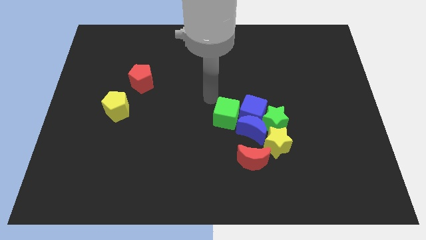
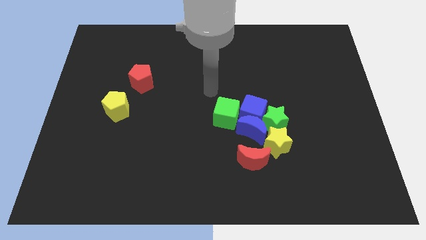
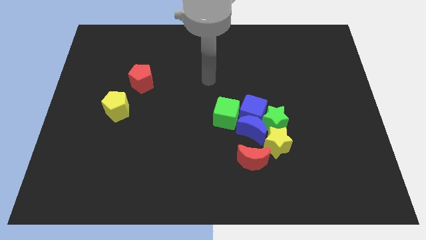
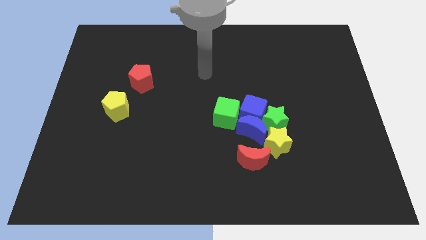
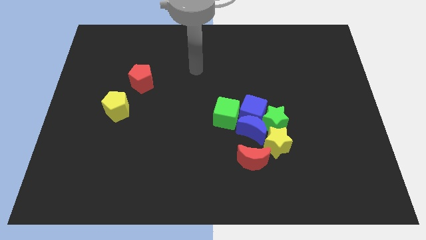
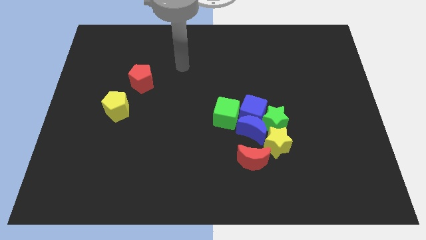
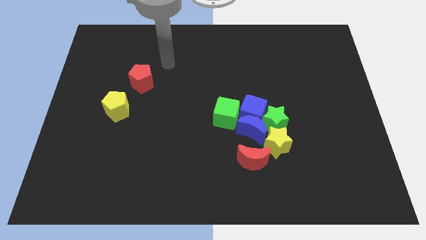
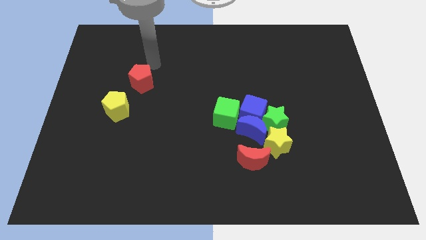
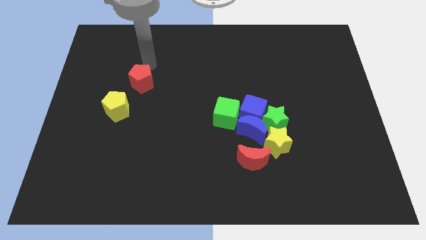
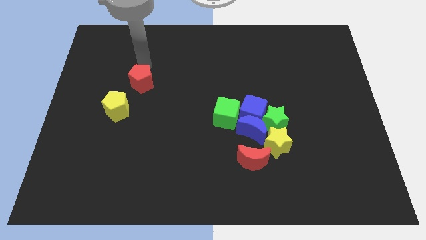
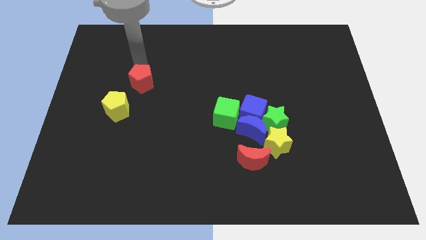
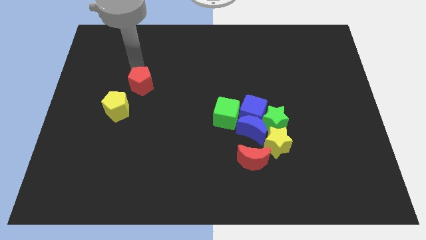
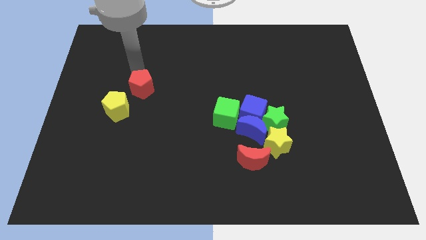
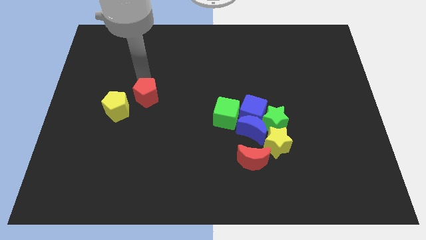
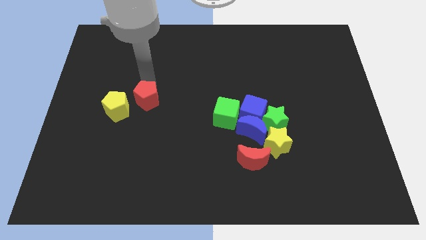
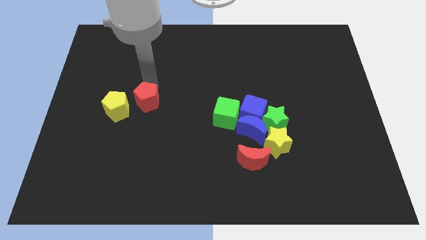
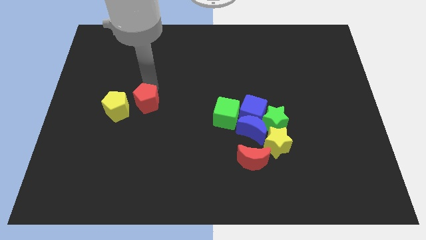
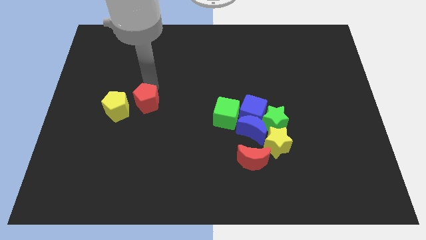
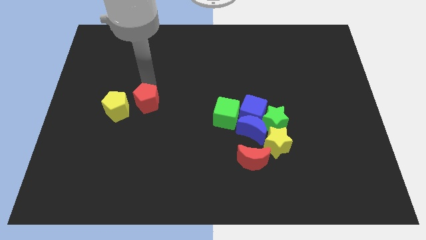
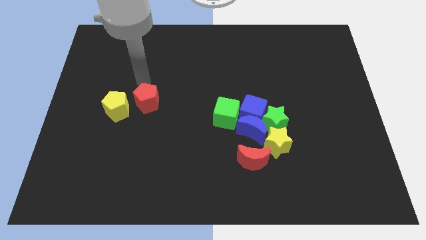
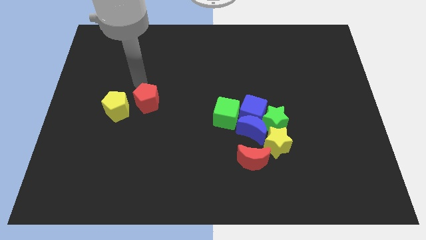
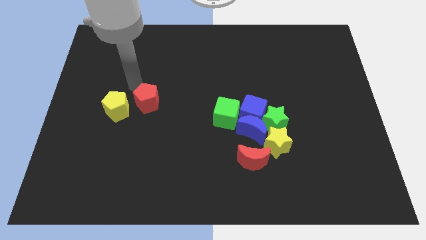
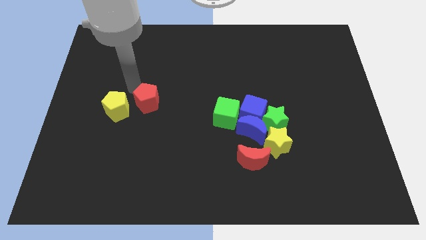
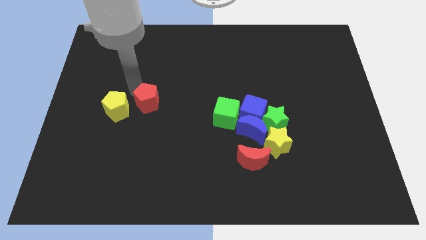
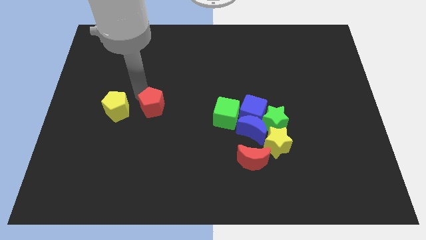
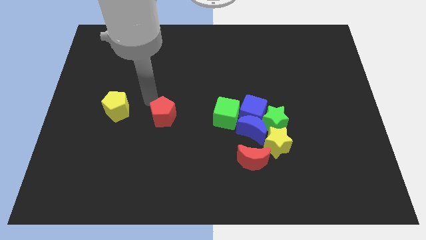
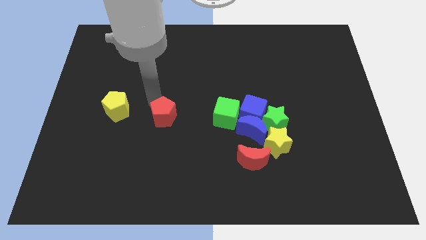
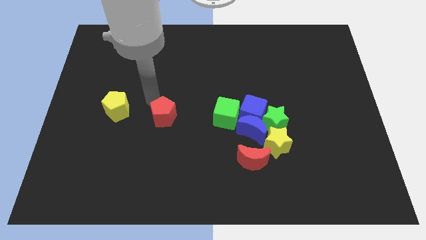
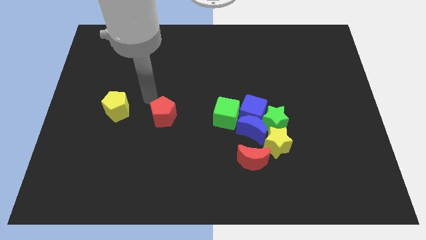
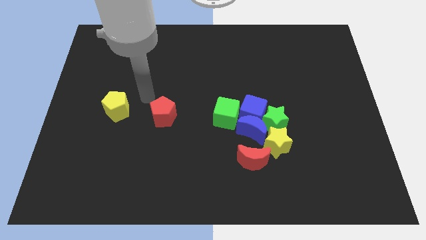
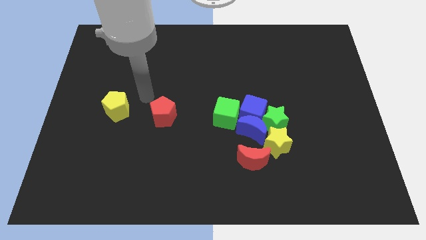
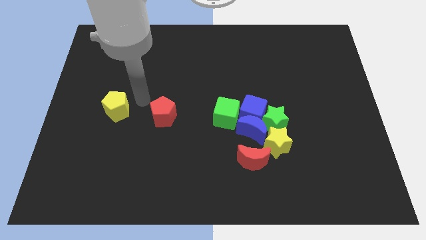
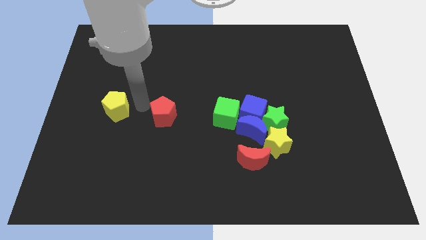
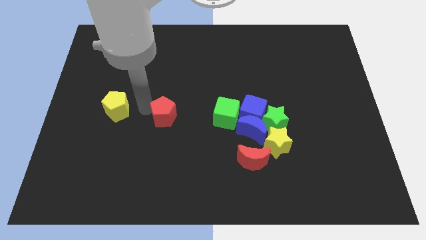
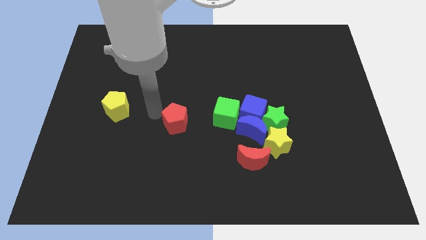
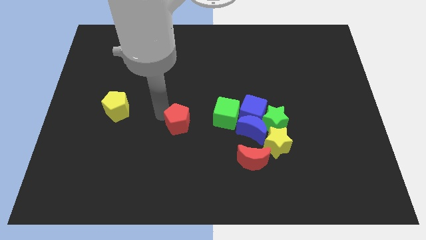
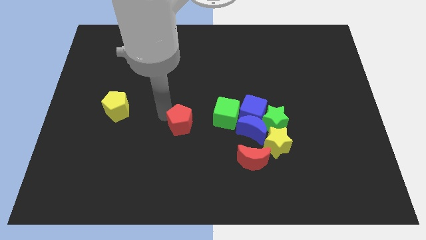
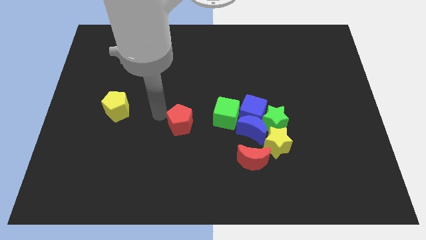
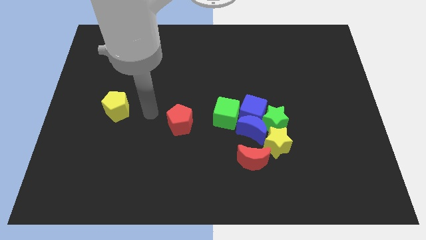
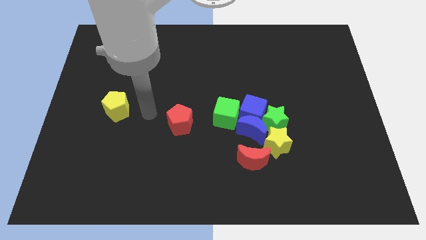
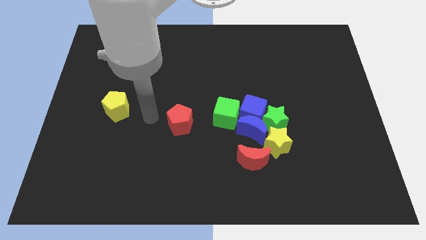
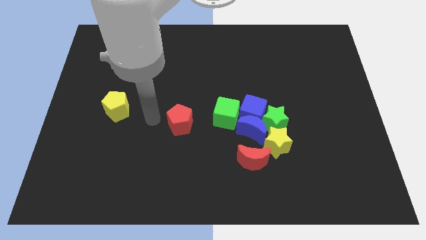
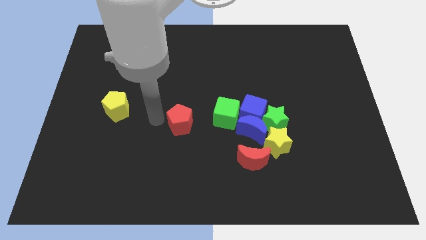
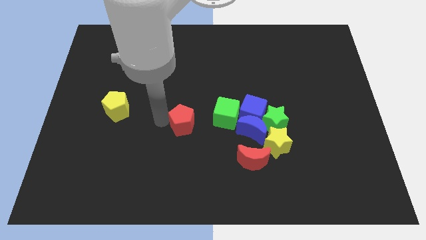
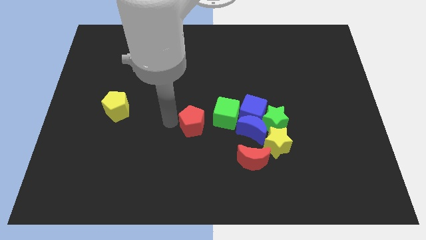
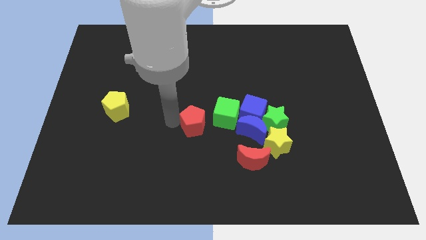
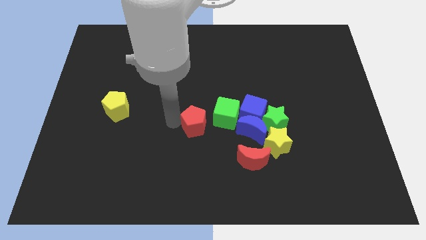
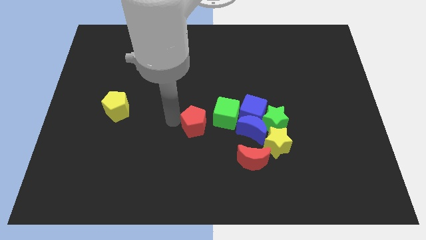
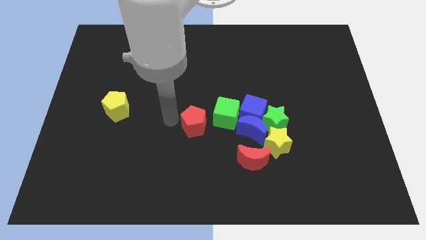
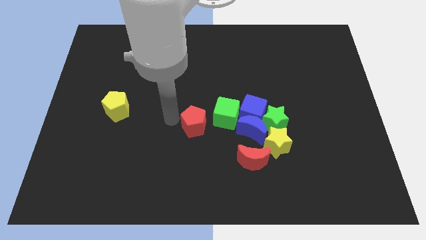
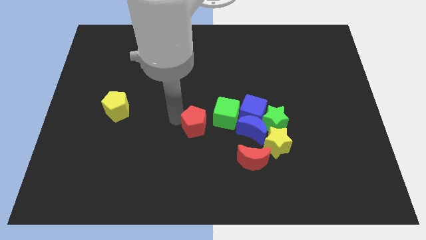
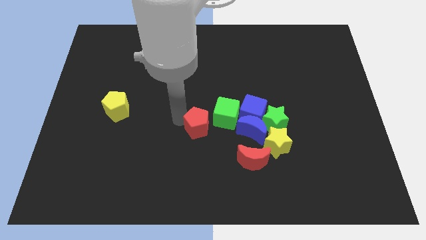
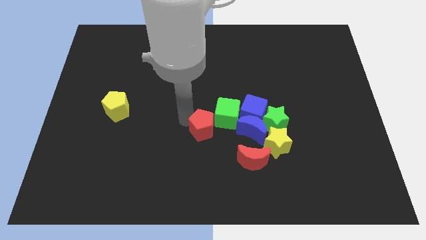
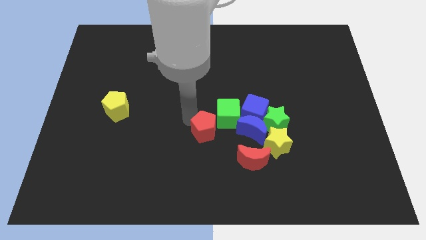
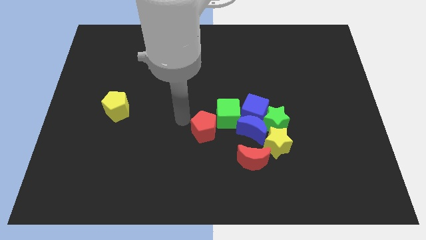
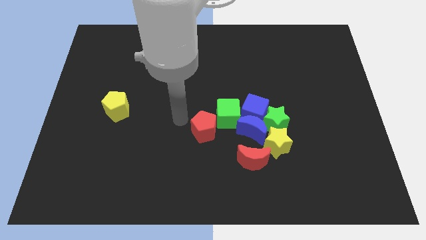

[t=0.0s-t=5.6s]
move the red pentagon left below the green cube

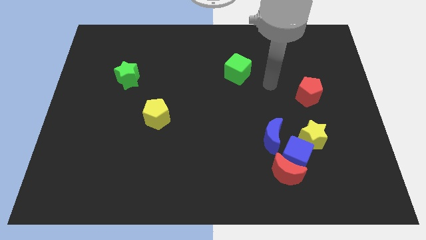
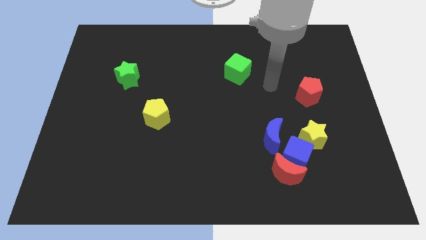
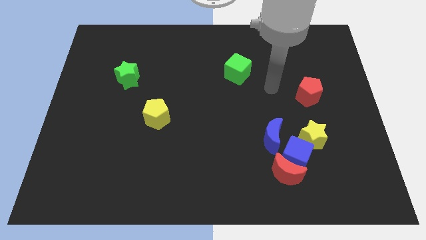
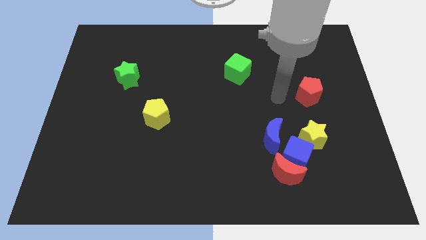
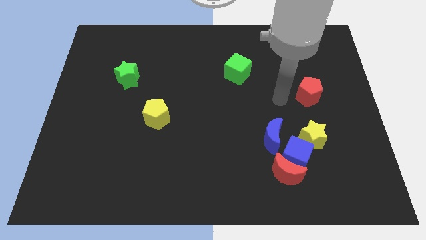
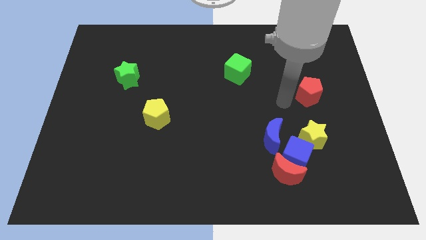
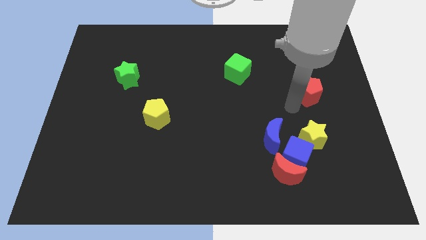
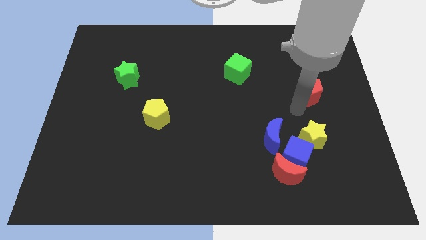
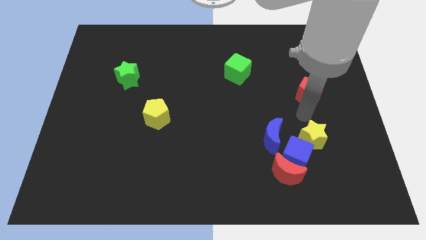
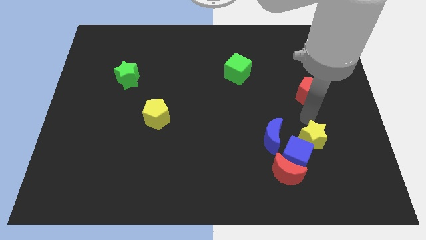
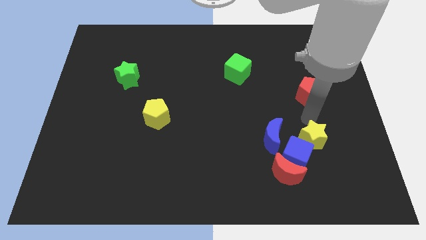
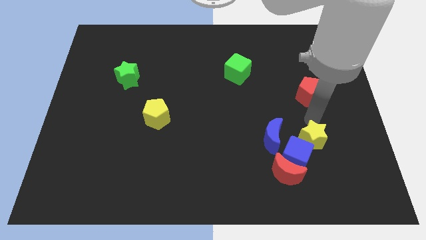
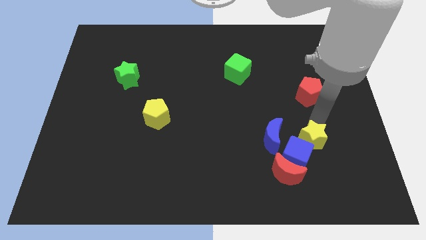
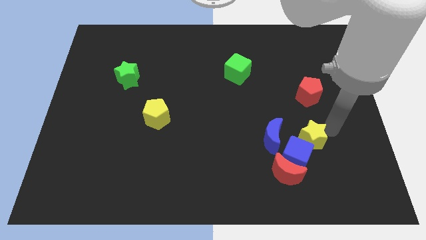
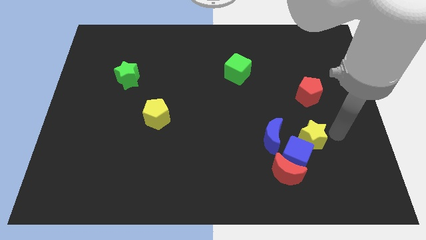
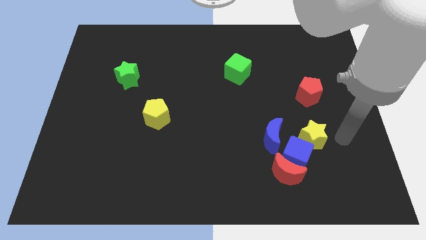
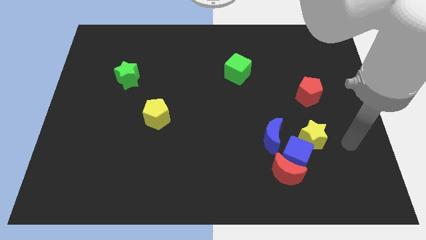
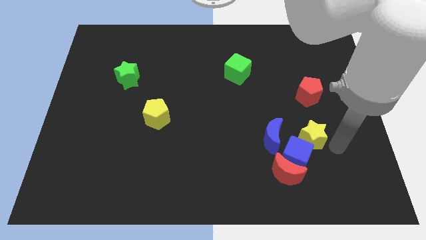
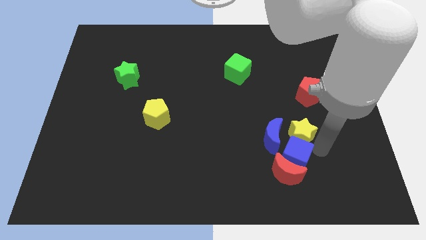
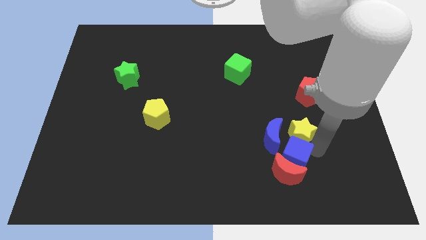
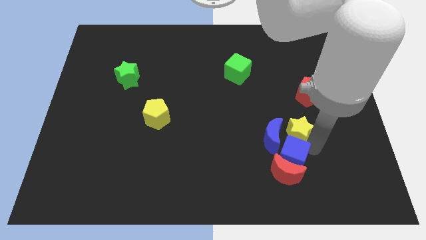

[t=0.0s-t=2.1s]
slide the yellow star at the top of the blue cube

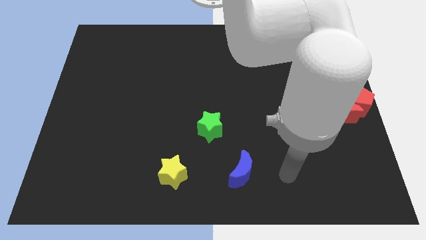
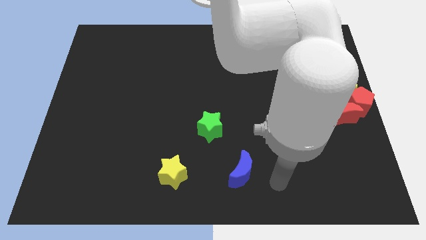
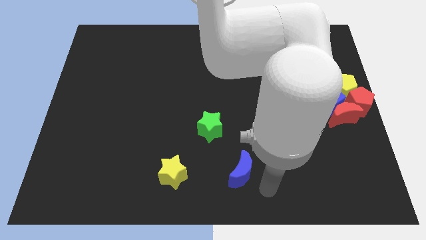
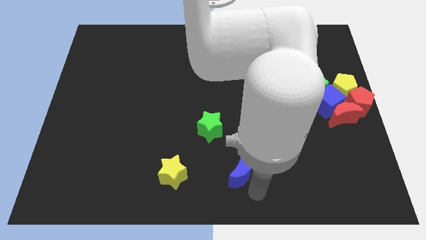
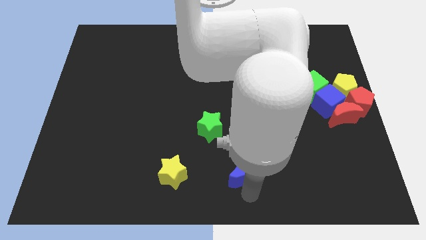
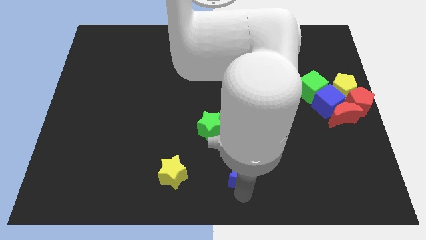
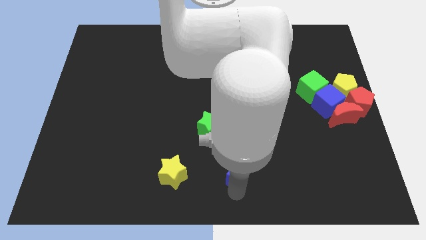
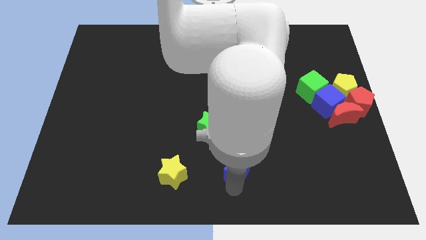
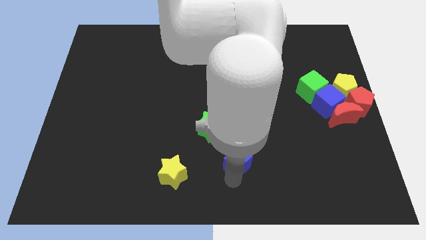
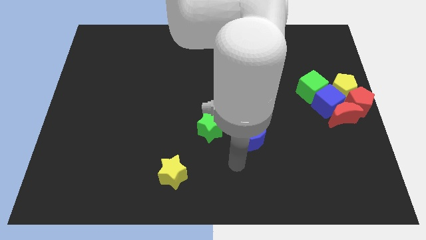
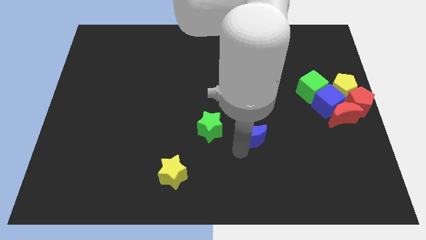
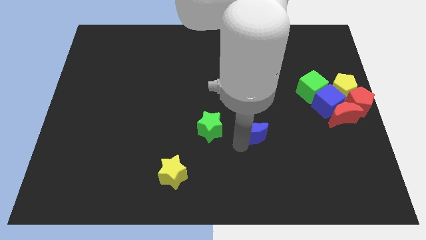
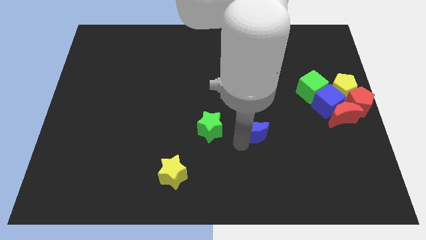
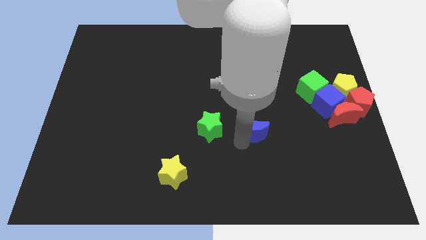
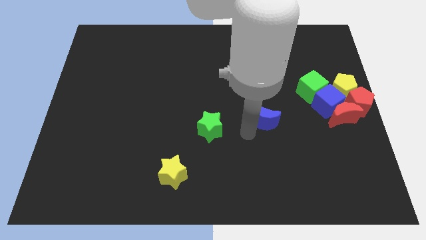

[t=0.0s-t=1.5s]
put the blue crescent to the right of the green star
